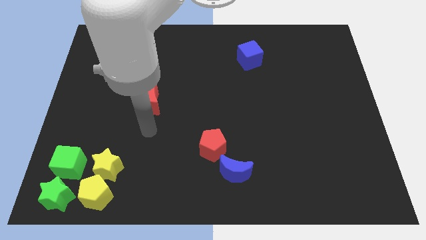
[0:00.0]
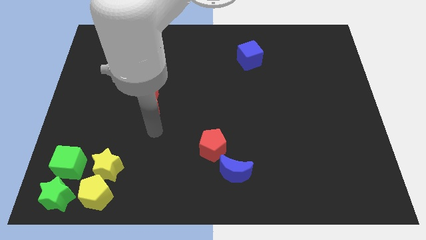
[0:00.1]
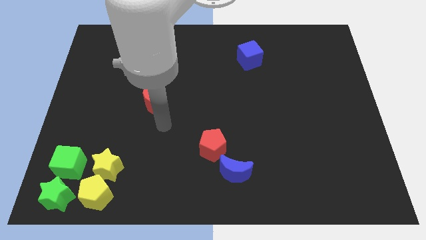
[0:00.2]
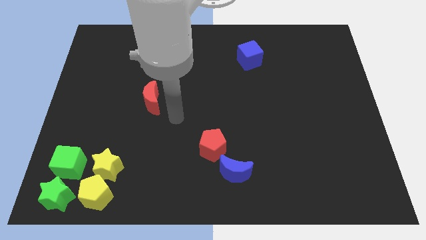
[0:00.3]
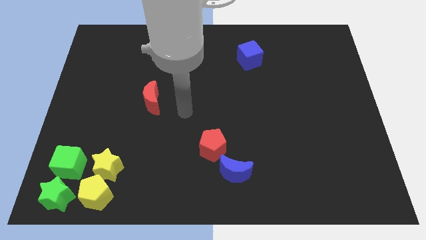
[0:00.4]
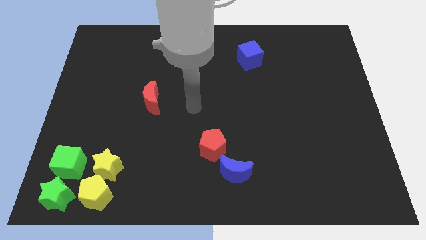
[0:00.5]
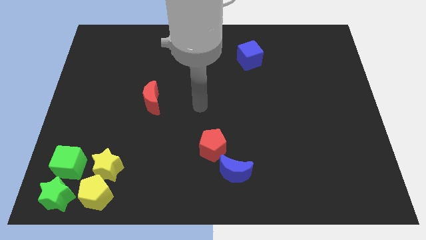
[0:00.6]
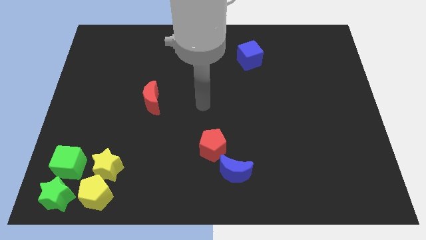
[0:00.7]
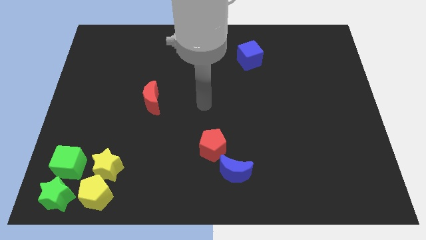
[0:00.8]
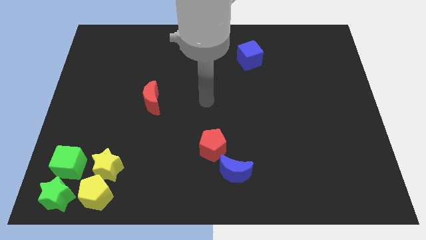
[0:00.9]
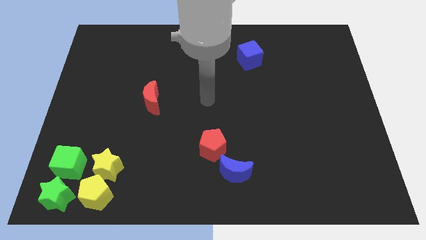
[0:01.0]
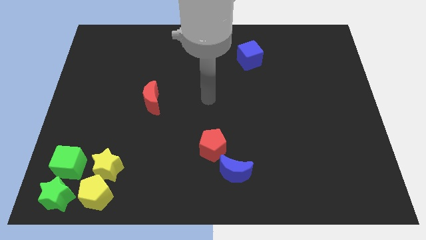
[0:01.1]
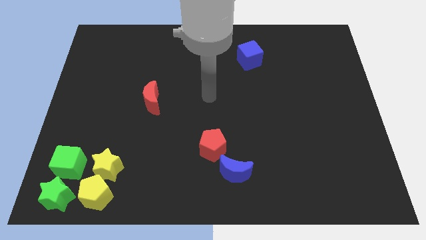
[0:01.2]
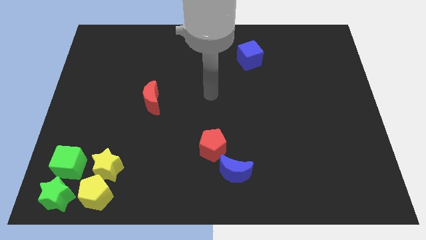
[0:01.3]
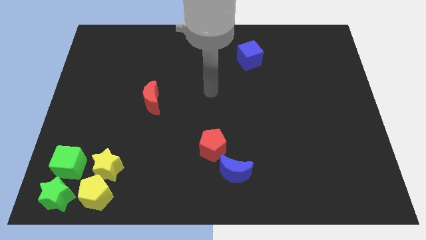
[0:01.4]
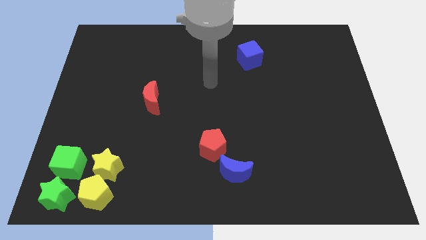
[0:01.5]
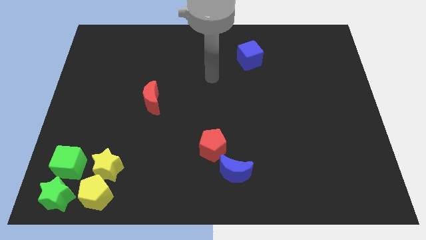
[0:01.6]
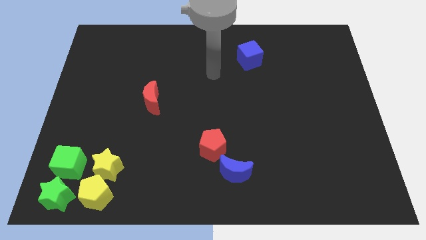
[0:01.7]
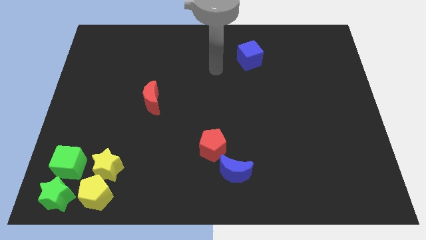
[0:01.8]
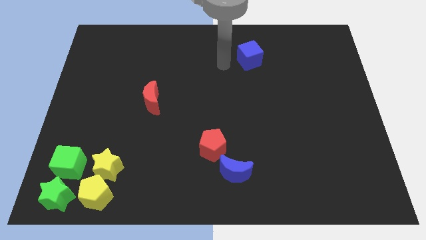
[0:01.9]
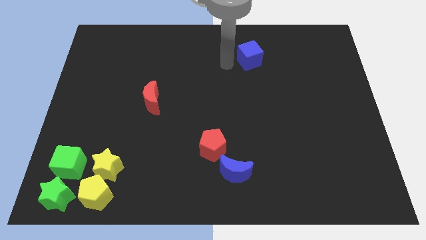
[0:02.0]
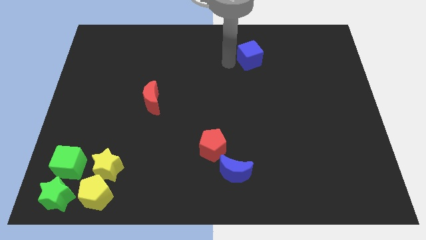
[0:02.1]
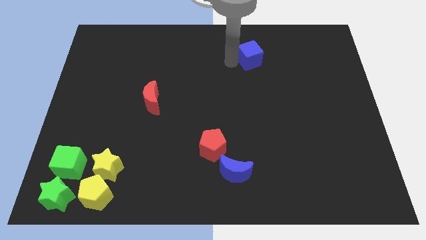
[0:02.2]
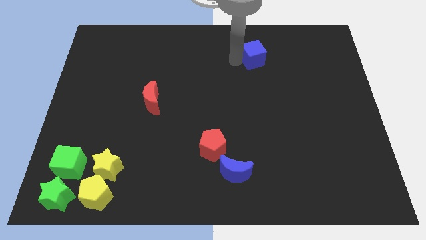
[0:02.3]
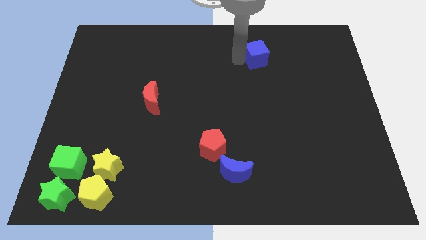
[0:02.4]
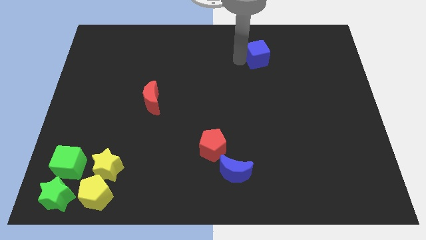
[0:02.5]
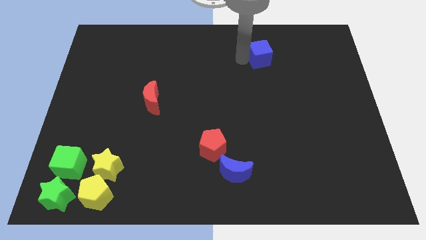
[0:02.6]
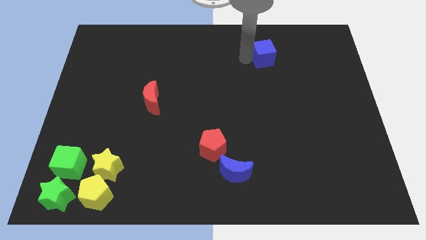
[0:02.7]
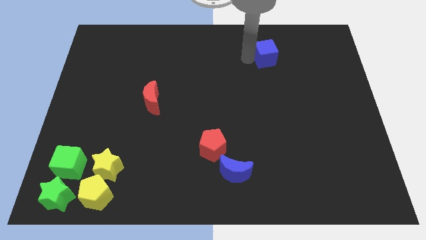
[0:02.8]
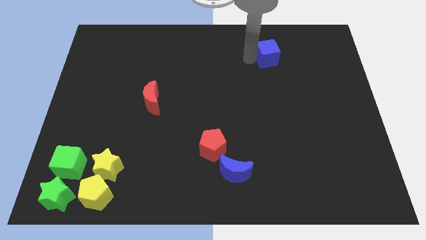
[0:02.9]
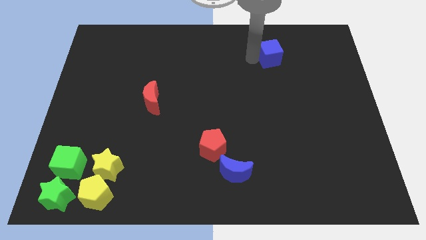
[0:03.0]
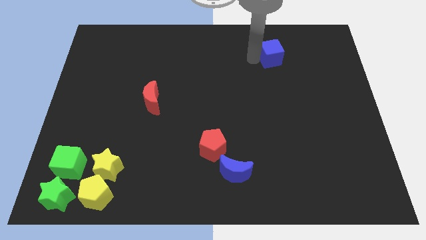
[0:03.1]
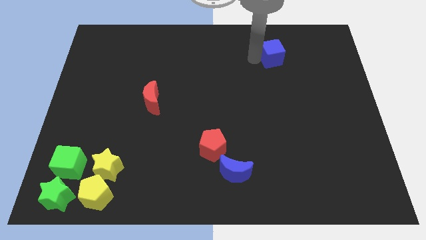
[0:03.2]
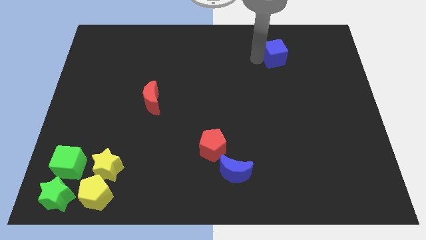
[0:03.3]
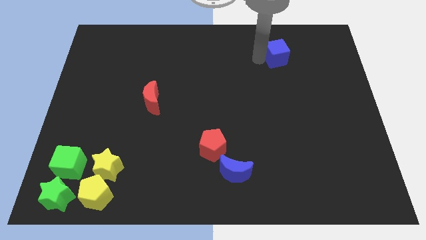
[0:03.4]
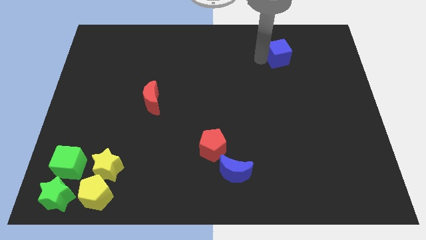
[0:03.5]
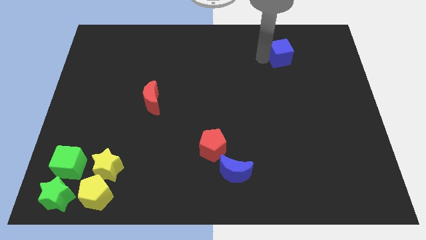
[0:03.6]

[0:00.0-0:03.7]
push blue cube towards right center

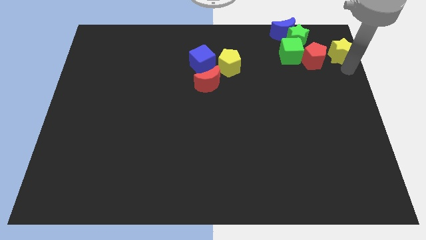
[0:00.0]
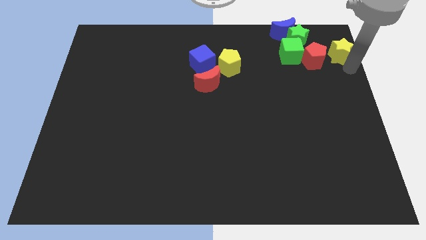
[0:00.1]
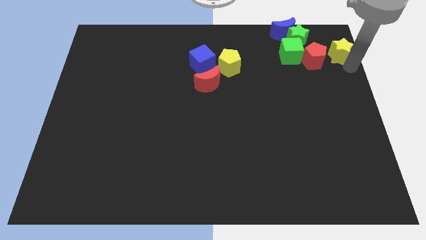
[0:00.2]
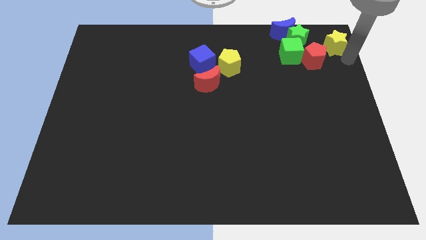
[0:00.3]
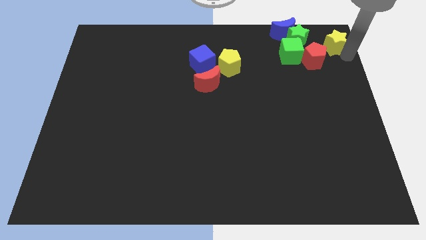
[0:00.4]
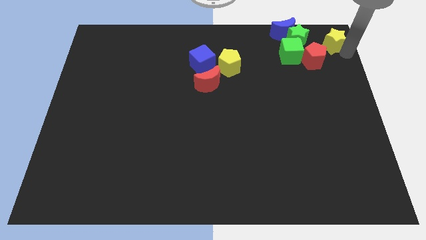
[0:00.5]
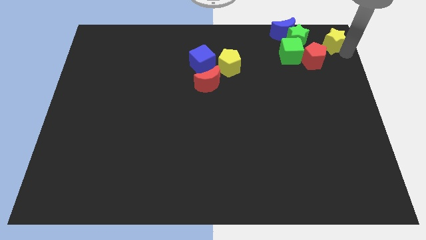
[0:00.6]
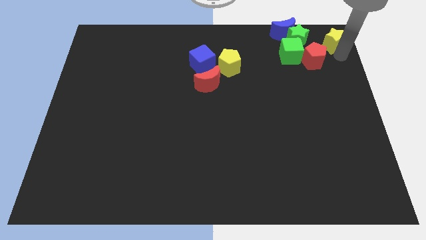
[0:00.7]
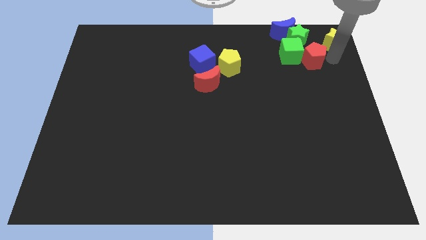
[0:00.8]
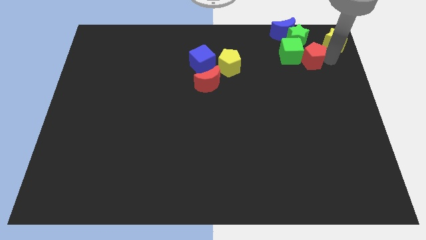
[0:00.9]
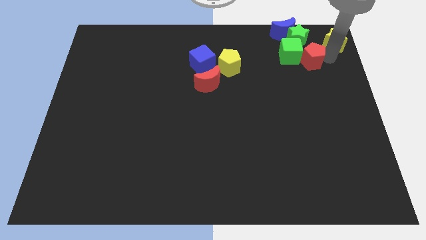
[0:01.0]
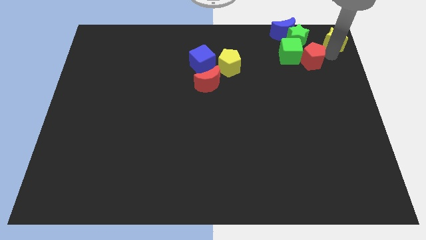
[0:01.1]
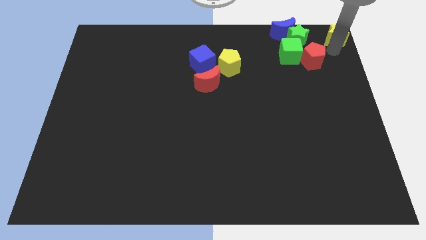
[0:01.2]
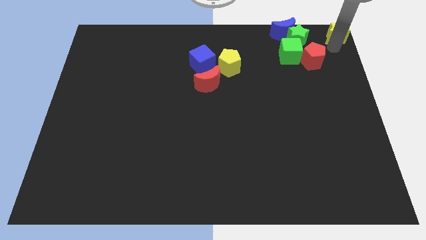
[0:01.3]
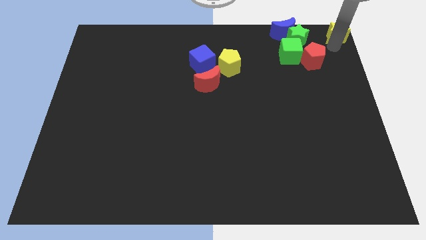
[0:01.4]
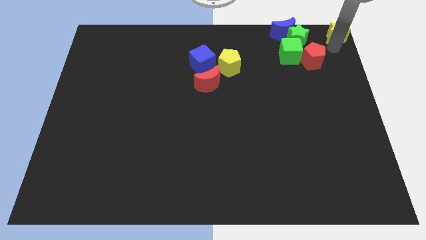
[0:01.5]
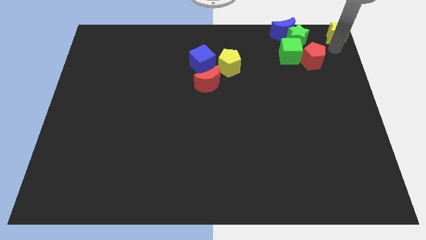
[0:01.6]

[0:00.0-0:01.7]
move the yellow star to the top right

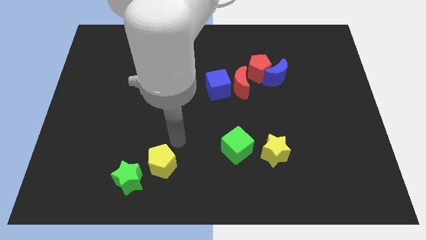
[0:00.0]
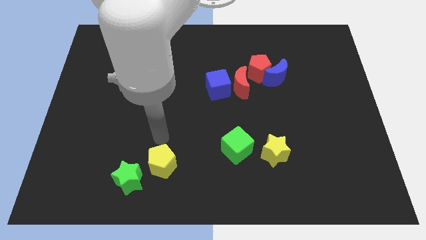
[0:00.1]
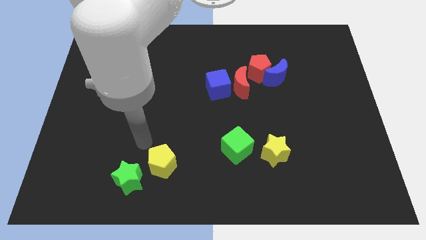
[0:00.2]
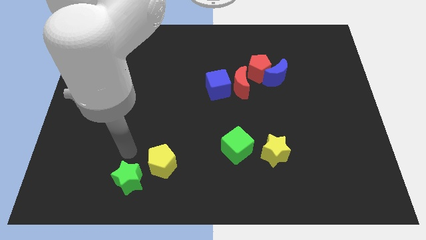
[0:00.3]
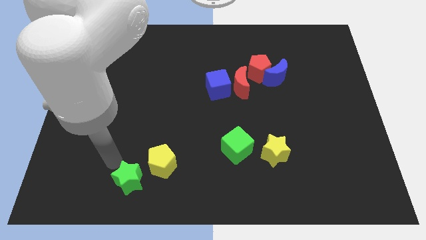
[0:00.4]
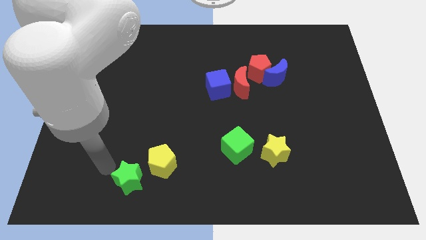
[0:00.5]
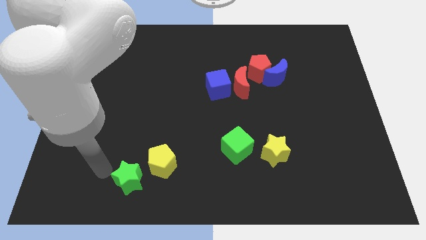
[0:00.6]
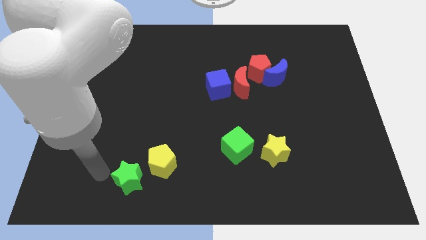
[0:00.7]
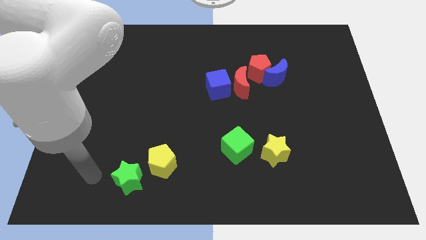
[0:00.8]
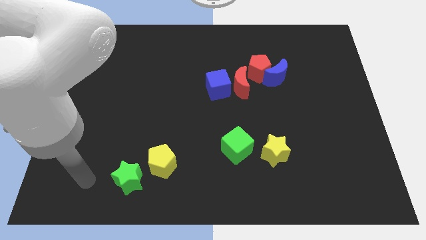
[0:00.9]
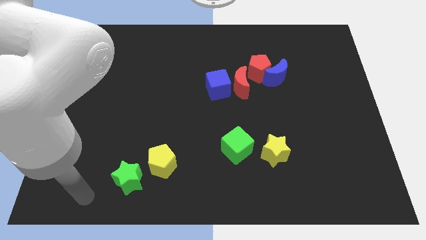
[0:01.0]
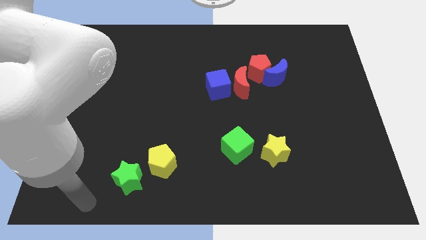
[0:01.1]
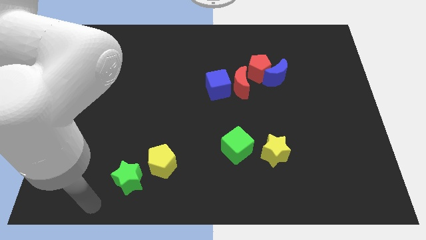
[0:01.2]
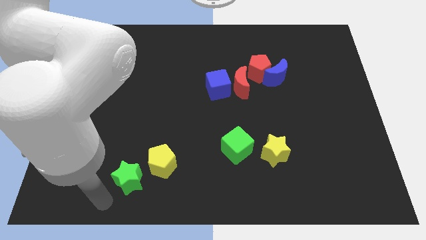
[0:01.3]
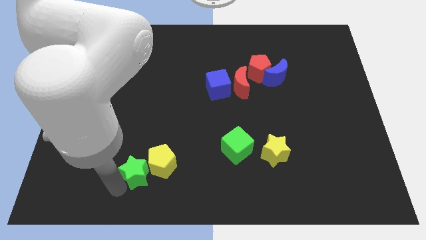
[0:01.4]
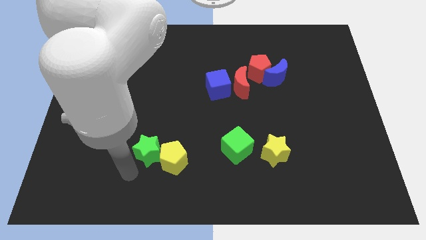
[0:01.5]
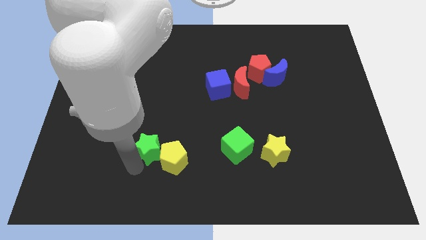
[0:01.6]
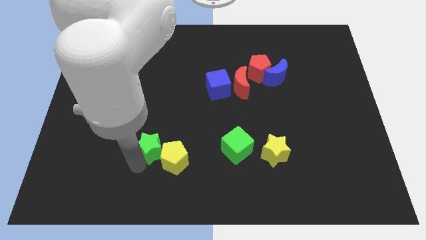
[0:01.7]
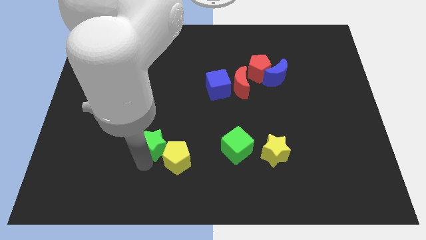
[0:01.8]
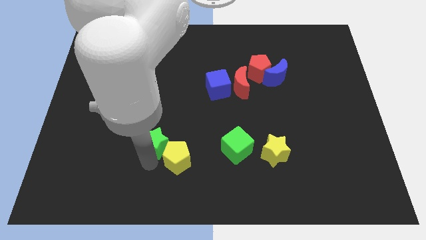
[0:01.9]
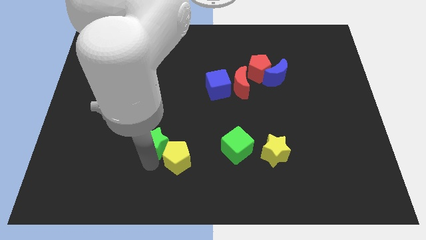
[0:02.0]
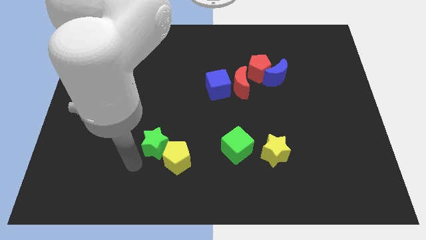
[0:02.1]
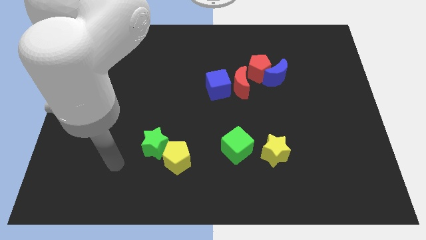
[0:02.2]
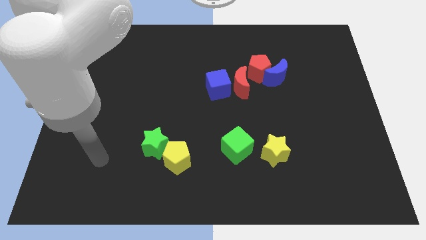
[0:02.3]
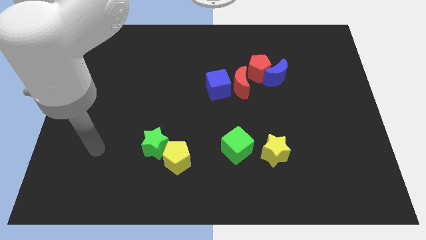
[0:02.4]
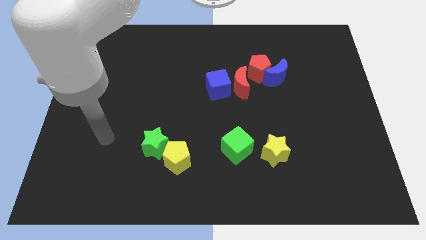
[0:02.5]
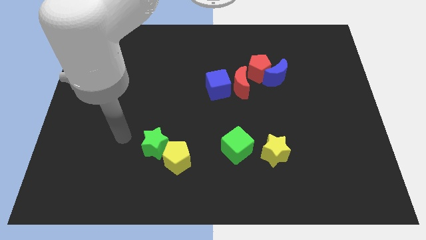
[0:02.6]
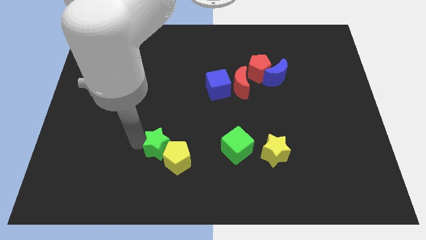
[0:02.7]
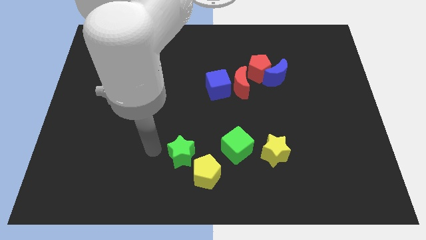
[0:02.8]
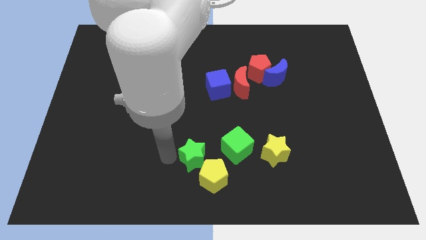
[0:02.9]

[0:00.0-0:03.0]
push green start slightly above yellow pentagon

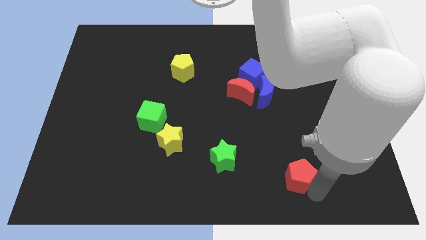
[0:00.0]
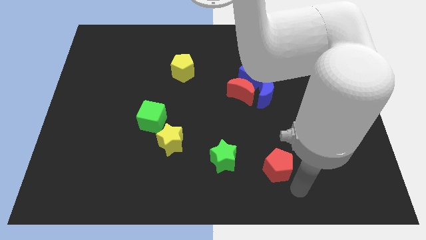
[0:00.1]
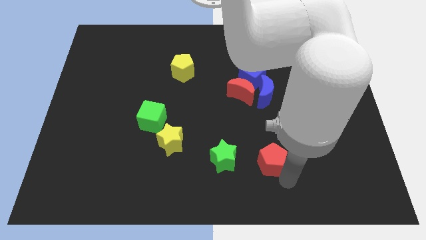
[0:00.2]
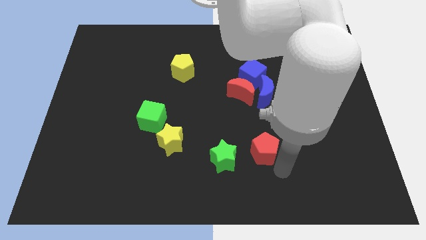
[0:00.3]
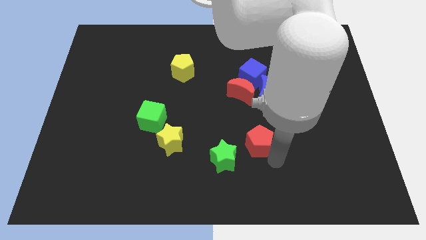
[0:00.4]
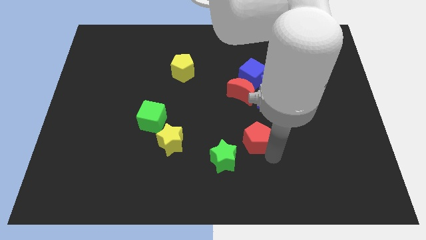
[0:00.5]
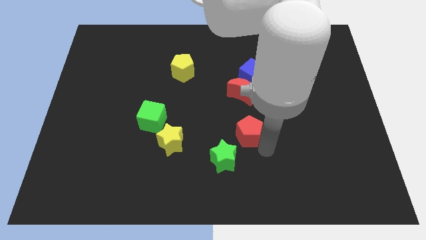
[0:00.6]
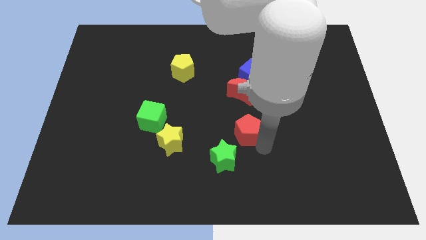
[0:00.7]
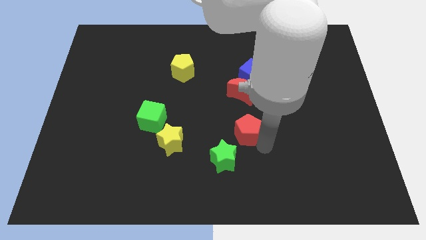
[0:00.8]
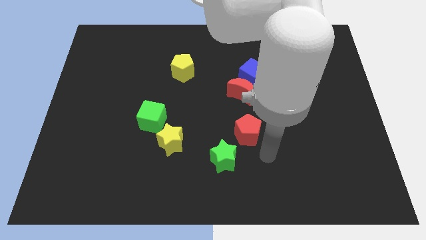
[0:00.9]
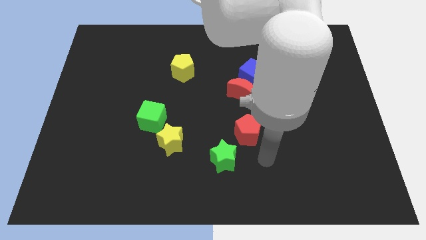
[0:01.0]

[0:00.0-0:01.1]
place the red pentagon below the red crescent
